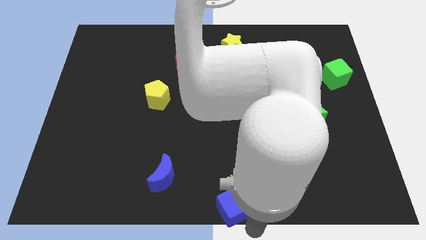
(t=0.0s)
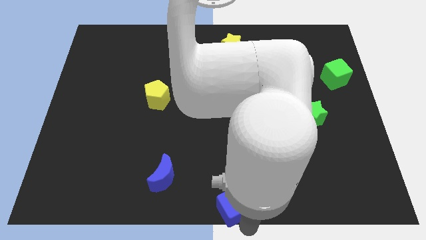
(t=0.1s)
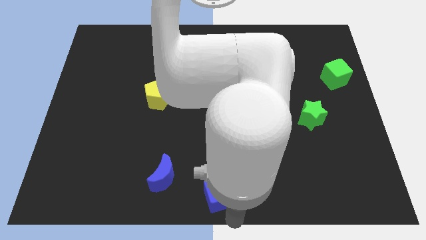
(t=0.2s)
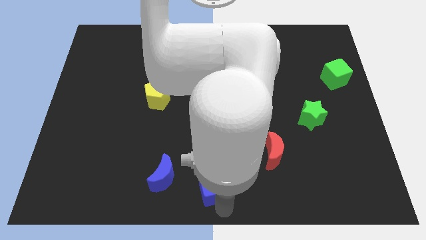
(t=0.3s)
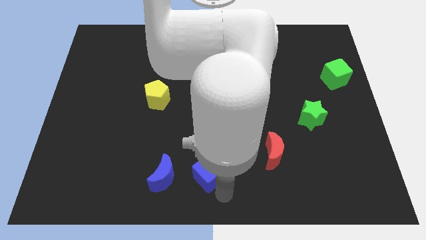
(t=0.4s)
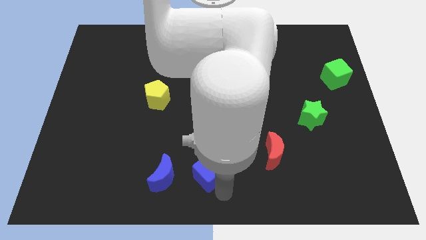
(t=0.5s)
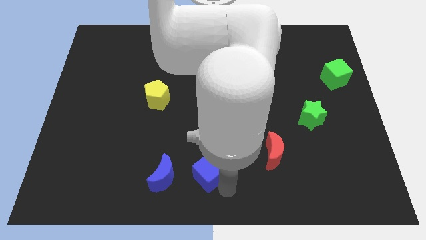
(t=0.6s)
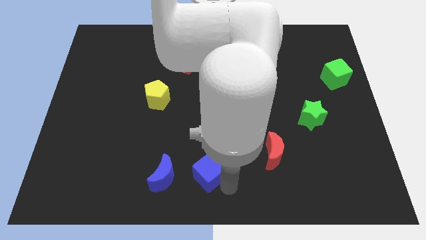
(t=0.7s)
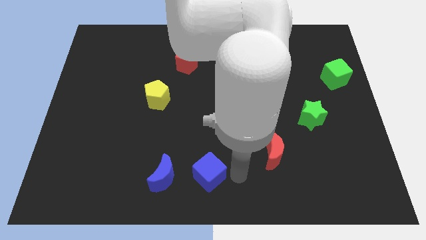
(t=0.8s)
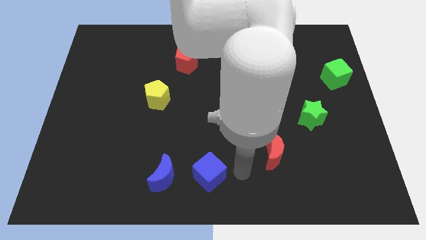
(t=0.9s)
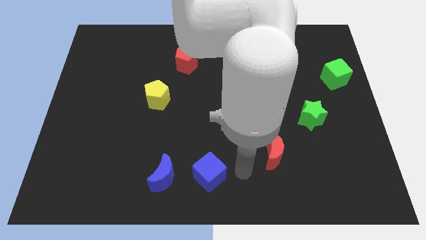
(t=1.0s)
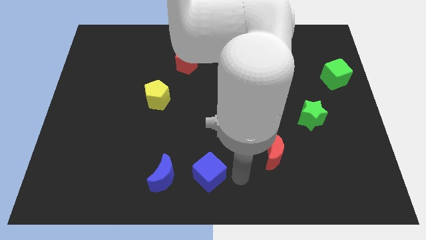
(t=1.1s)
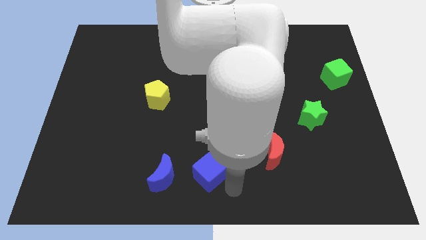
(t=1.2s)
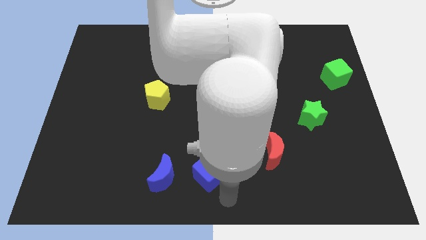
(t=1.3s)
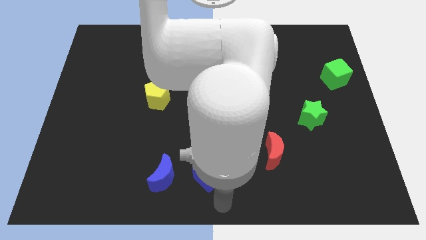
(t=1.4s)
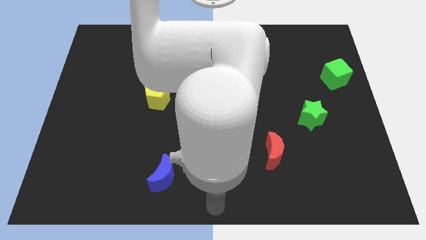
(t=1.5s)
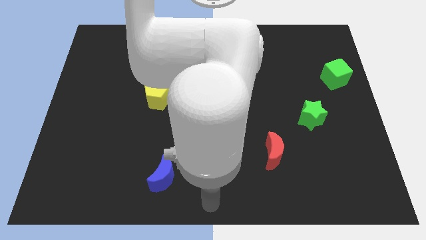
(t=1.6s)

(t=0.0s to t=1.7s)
place the blue cube between the blue moon and red moon

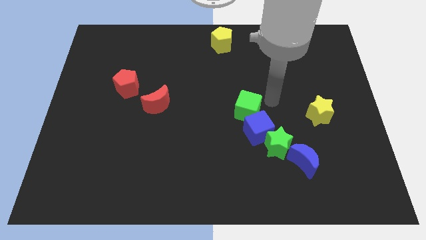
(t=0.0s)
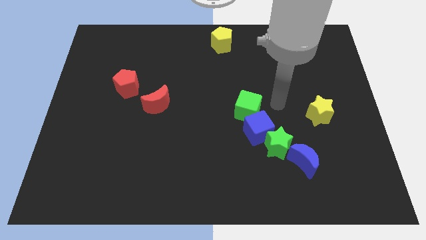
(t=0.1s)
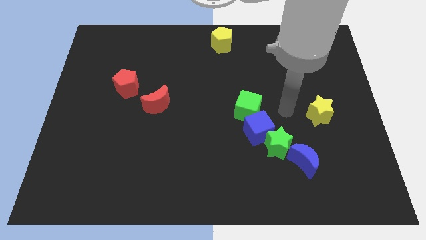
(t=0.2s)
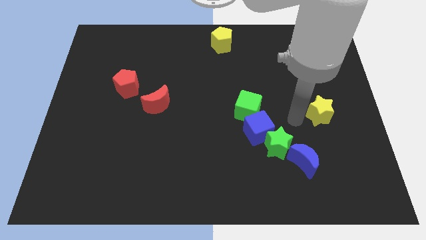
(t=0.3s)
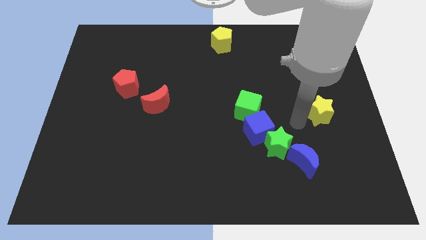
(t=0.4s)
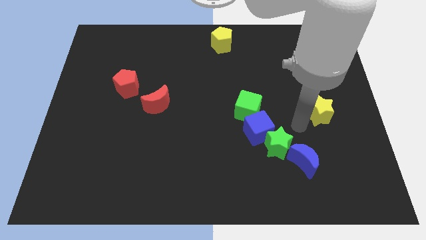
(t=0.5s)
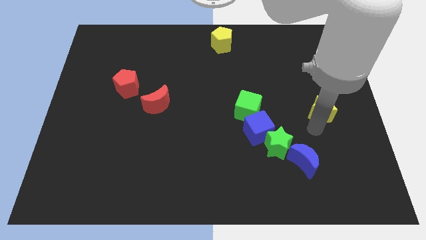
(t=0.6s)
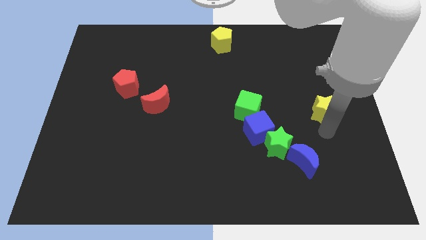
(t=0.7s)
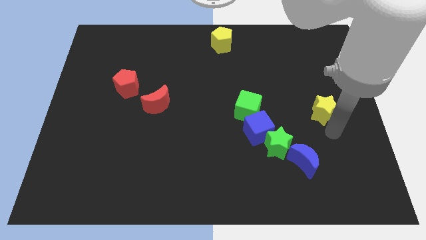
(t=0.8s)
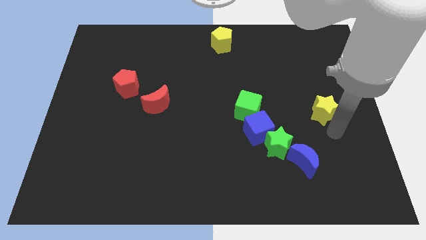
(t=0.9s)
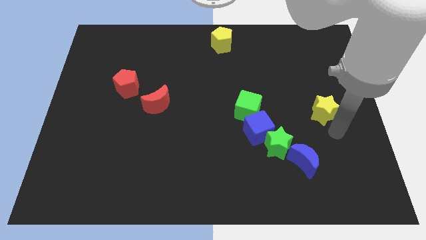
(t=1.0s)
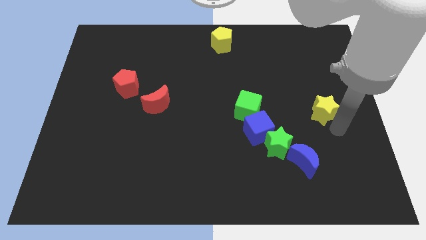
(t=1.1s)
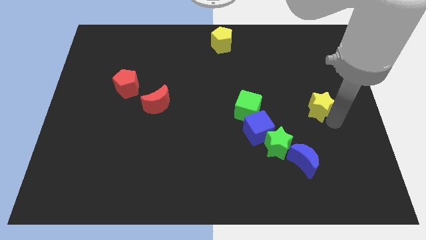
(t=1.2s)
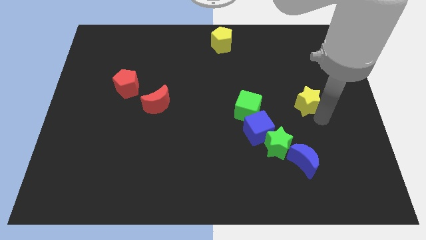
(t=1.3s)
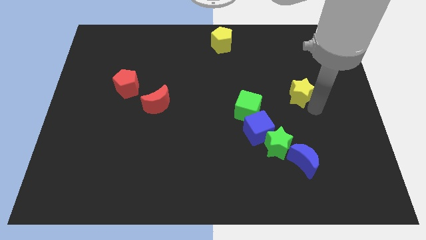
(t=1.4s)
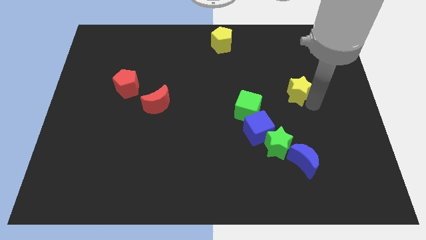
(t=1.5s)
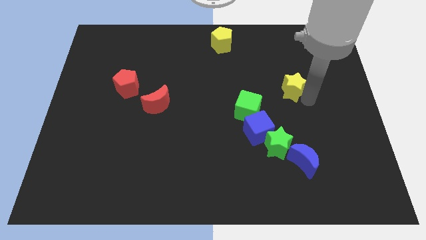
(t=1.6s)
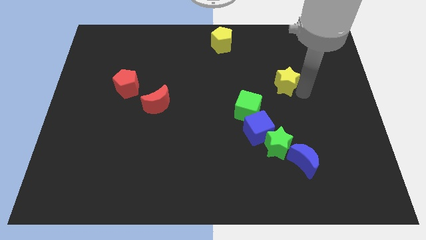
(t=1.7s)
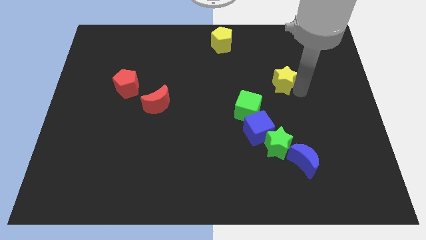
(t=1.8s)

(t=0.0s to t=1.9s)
move the yellow star to the top right of the green cube

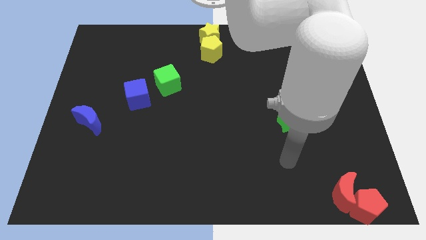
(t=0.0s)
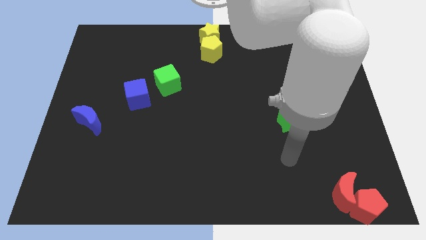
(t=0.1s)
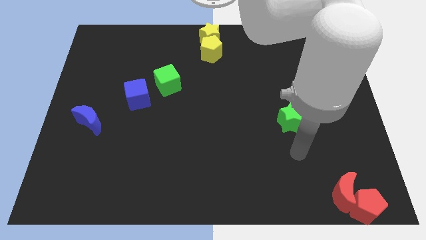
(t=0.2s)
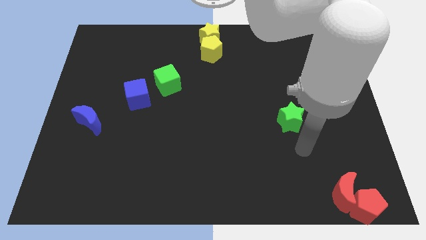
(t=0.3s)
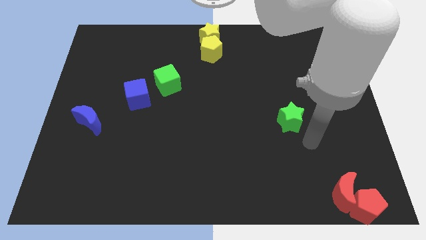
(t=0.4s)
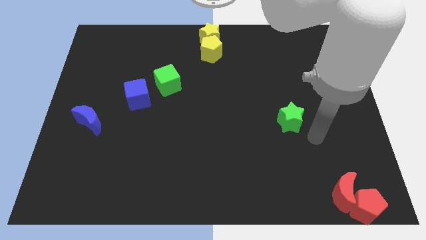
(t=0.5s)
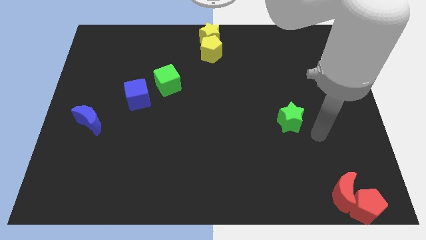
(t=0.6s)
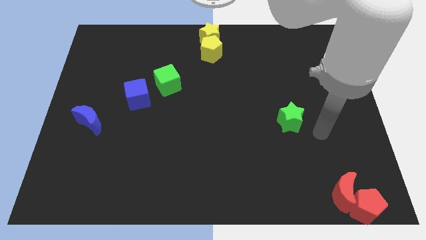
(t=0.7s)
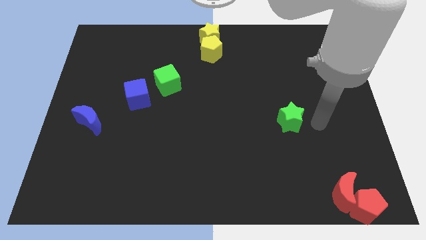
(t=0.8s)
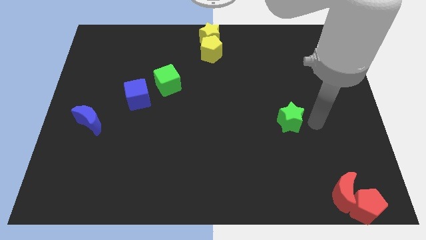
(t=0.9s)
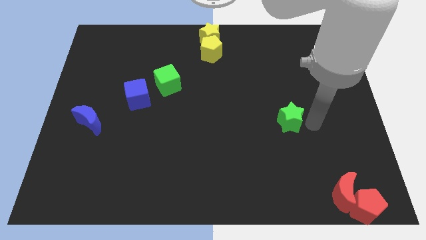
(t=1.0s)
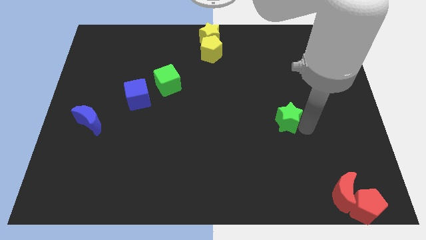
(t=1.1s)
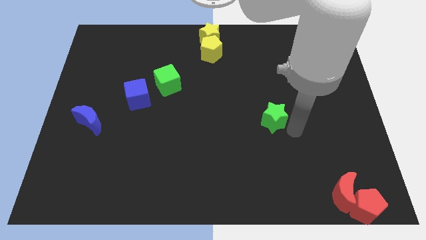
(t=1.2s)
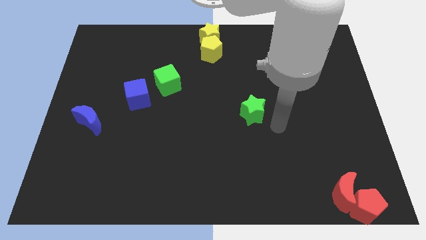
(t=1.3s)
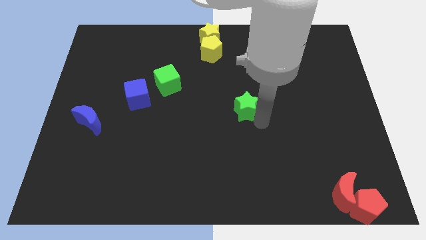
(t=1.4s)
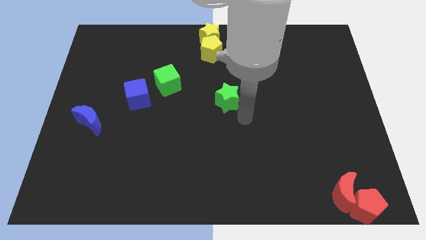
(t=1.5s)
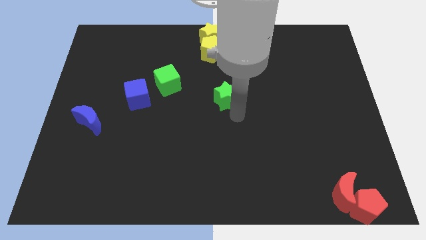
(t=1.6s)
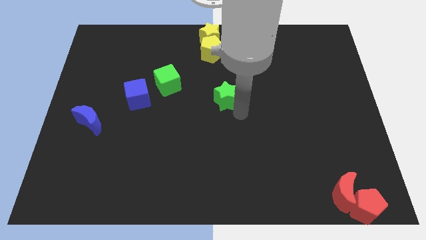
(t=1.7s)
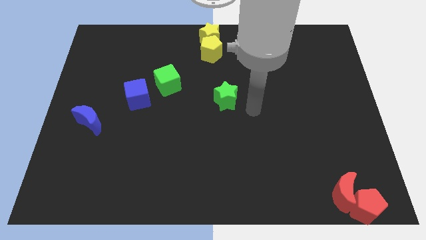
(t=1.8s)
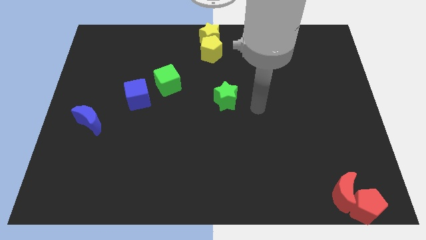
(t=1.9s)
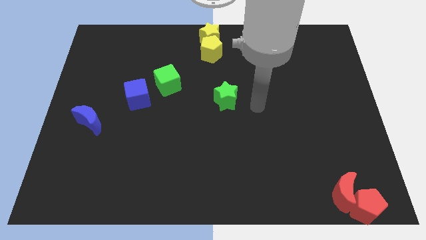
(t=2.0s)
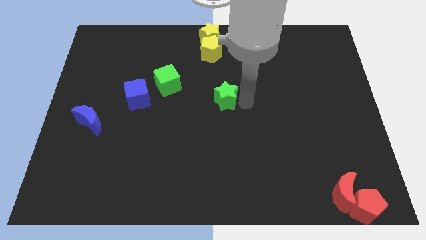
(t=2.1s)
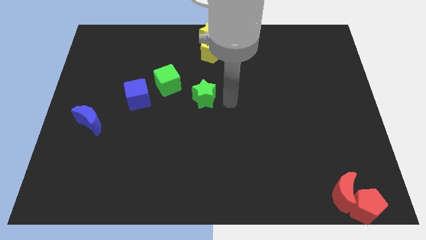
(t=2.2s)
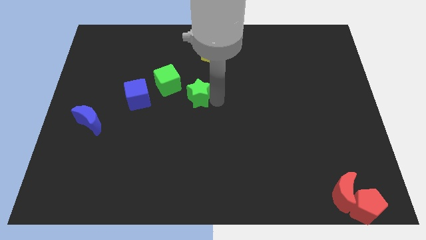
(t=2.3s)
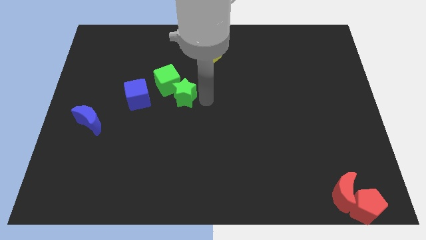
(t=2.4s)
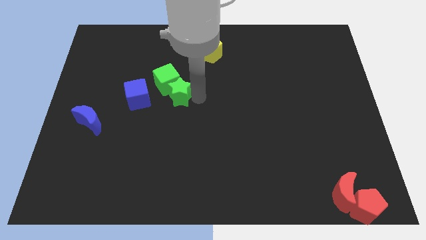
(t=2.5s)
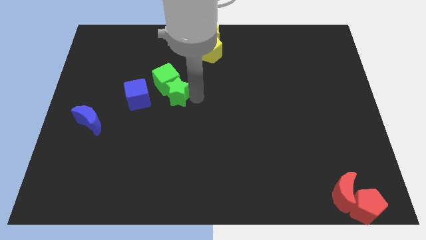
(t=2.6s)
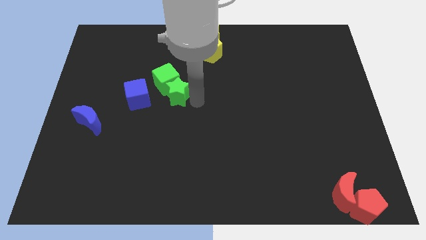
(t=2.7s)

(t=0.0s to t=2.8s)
push the green star into the green cube

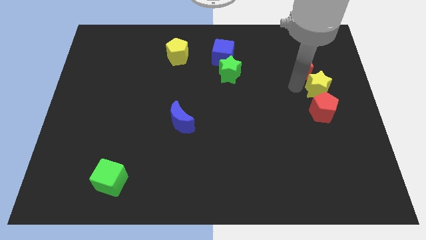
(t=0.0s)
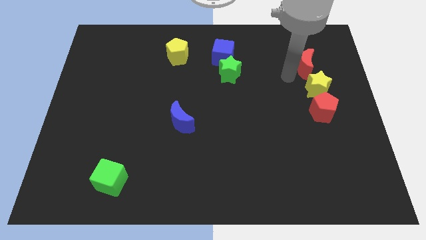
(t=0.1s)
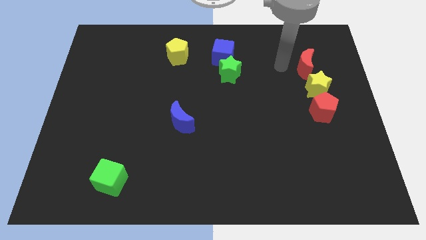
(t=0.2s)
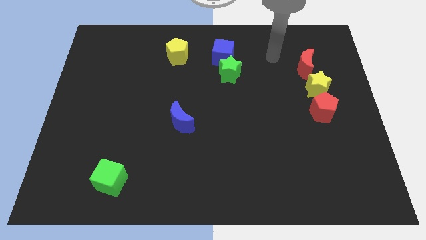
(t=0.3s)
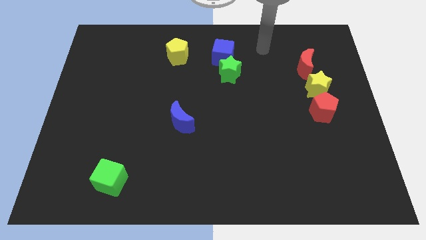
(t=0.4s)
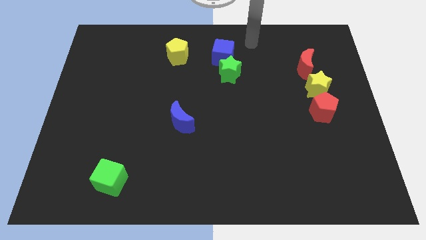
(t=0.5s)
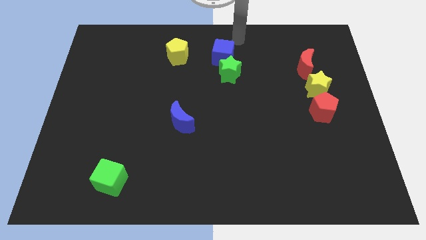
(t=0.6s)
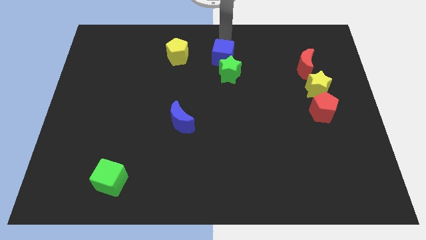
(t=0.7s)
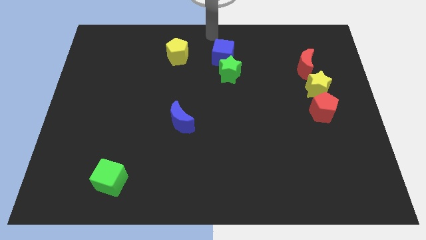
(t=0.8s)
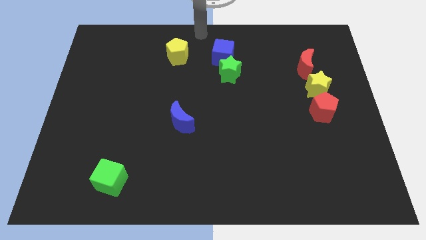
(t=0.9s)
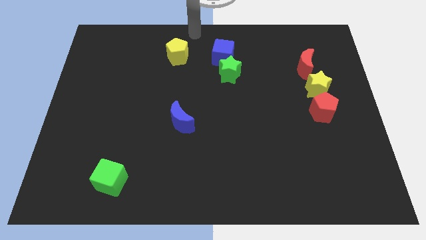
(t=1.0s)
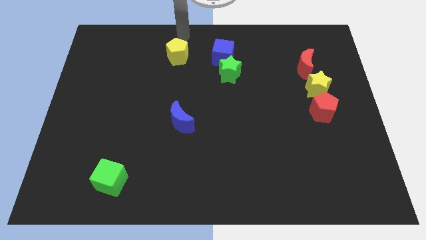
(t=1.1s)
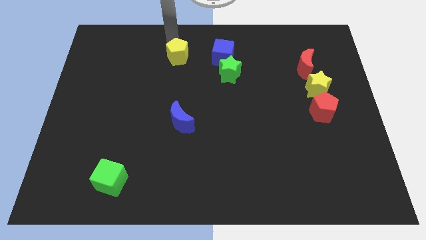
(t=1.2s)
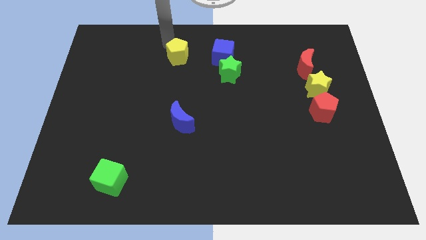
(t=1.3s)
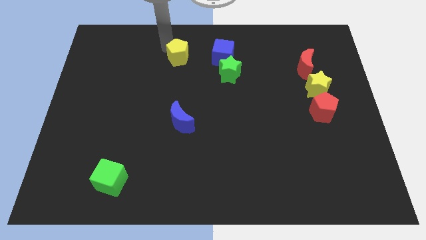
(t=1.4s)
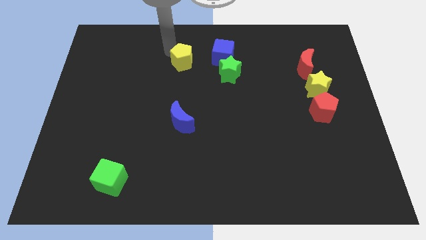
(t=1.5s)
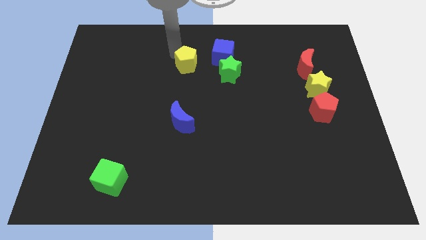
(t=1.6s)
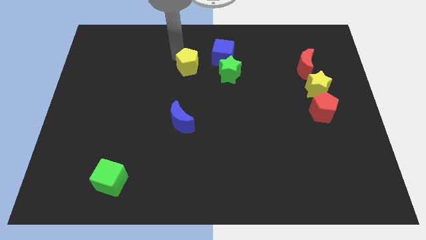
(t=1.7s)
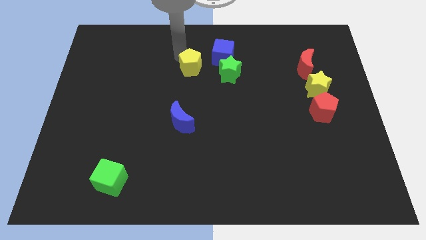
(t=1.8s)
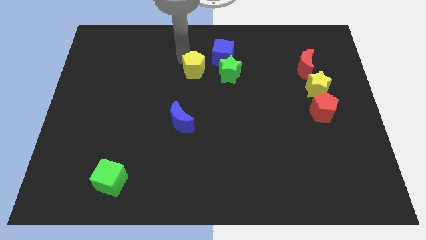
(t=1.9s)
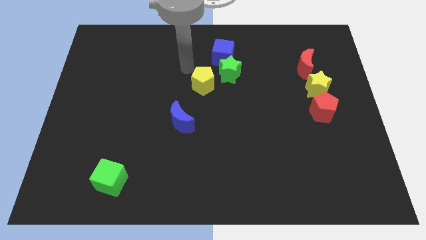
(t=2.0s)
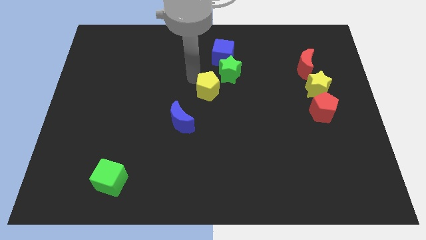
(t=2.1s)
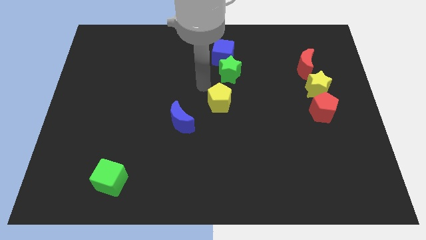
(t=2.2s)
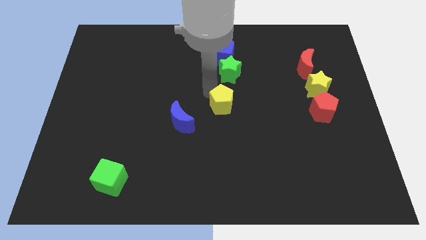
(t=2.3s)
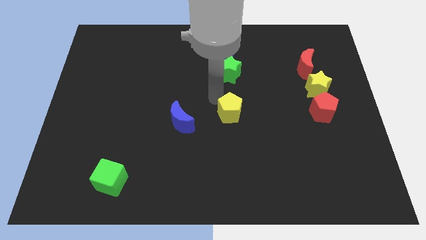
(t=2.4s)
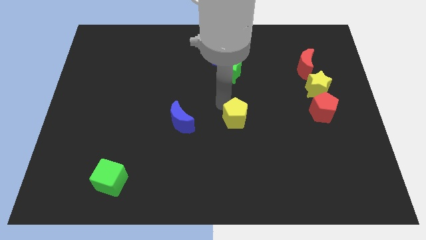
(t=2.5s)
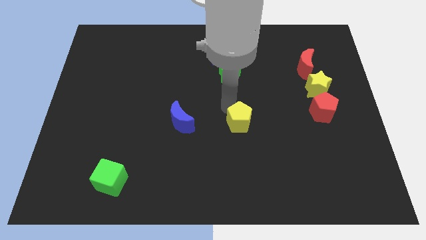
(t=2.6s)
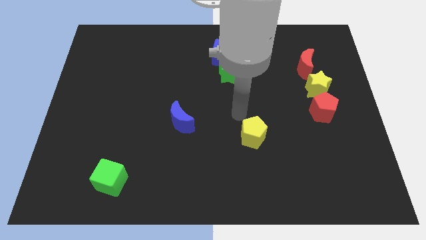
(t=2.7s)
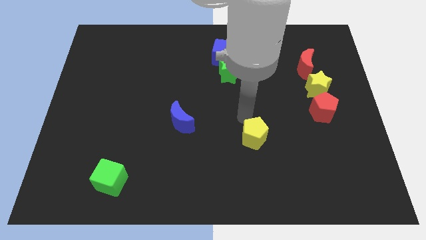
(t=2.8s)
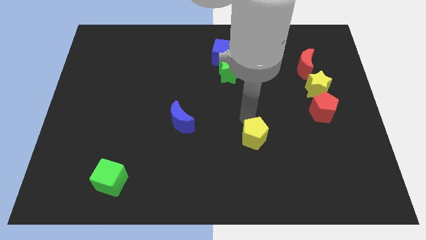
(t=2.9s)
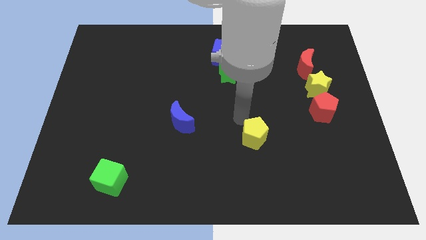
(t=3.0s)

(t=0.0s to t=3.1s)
move the yellow pentagon to the right side of the blue moon
